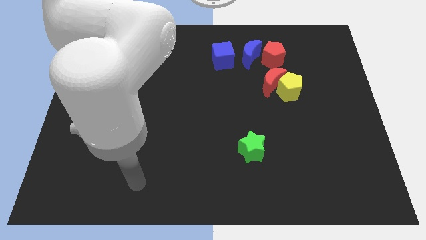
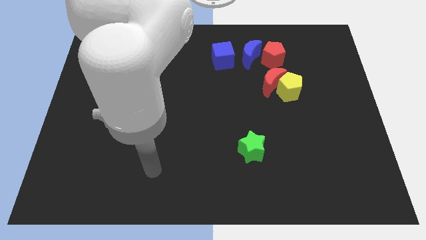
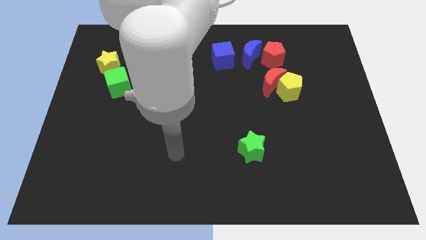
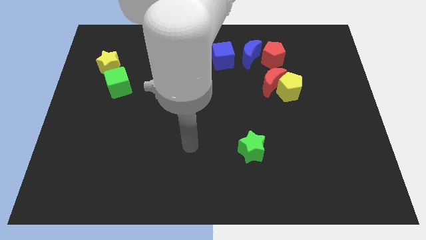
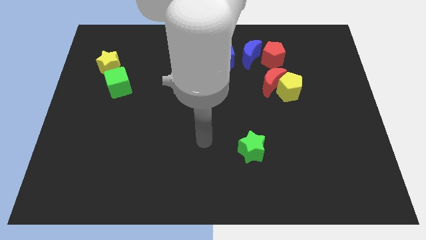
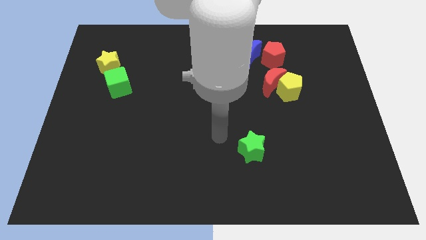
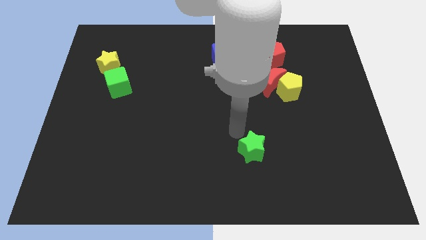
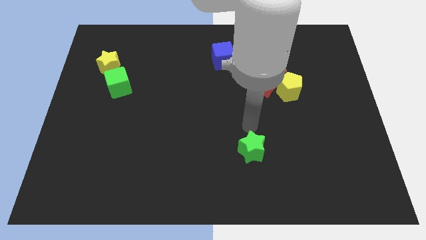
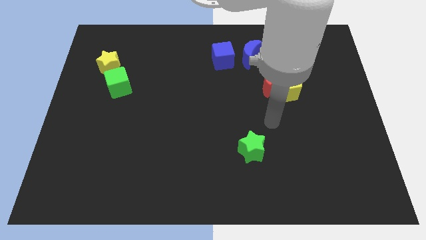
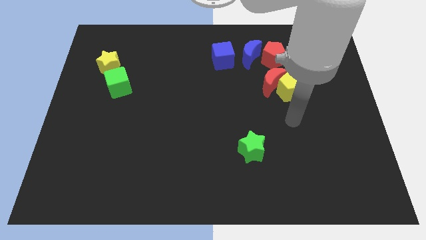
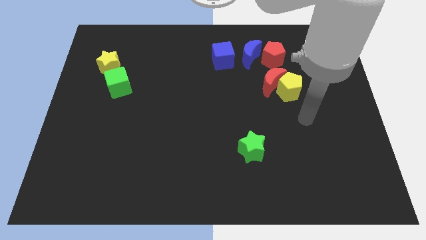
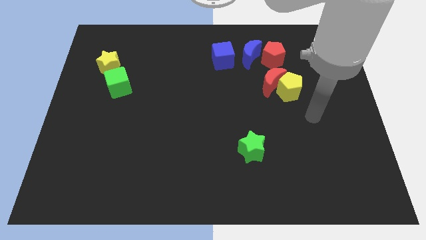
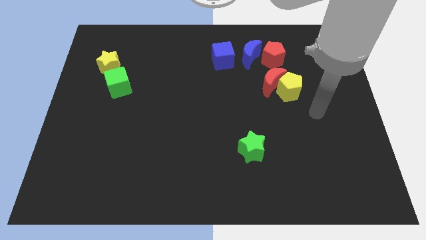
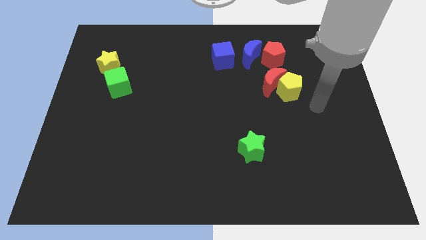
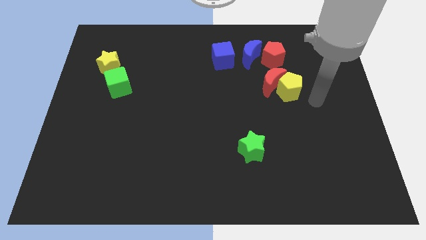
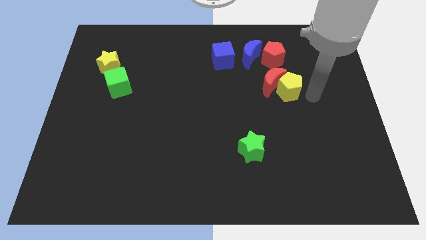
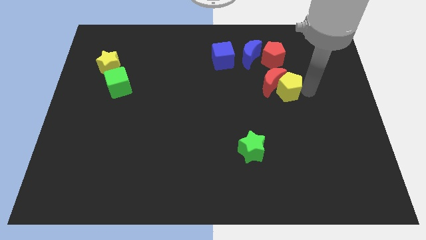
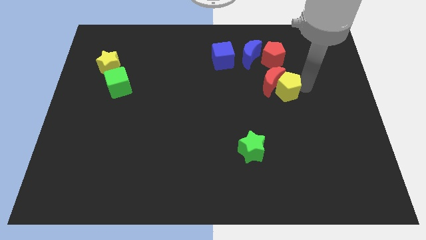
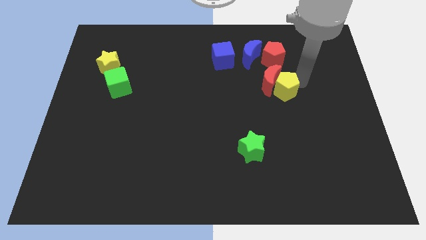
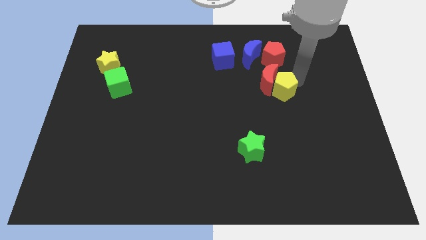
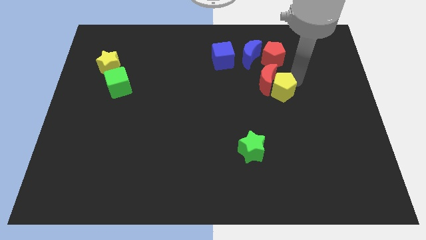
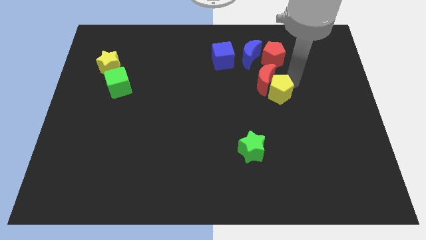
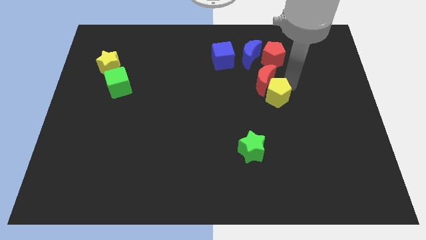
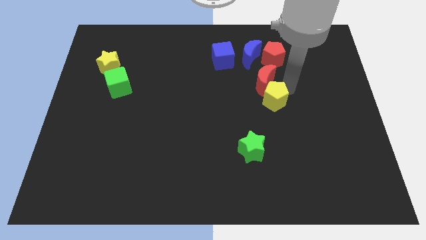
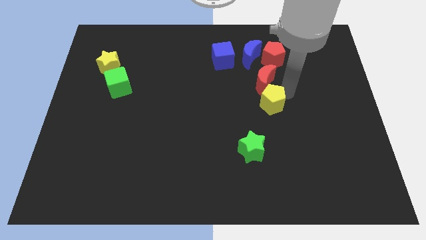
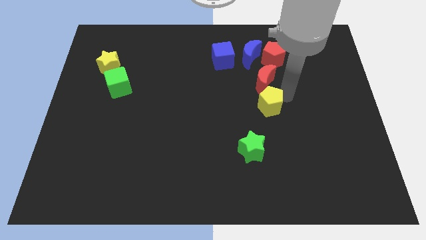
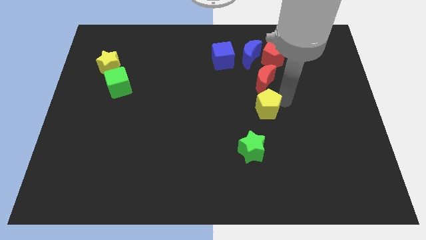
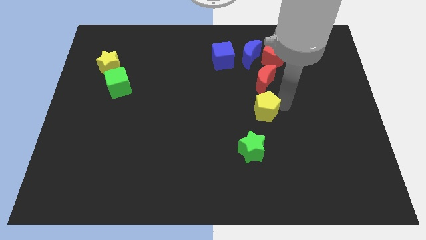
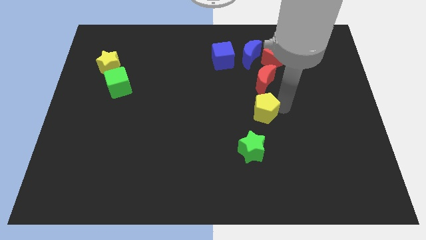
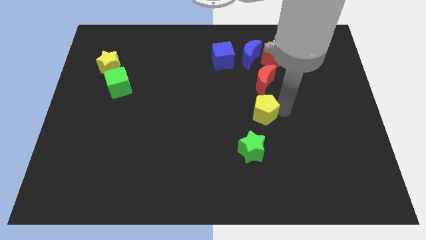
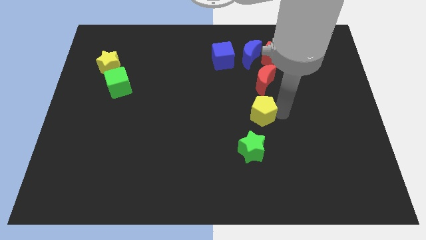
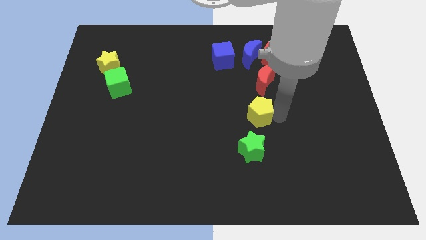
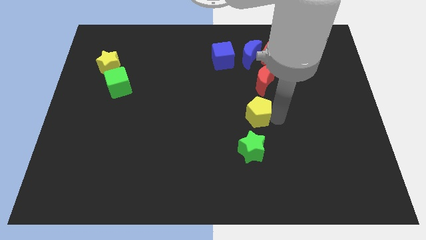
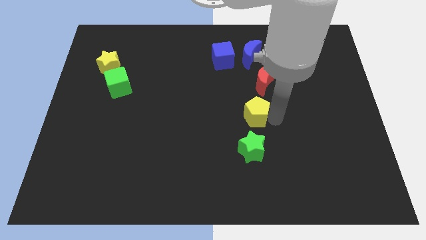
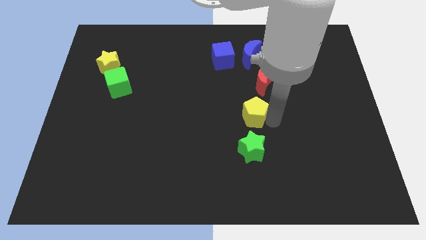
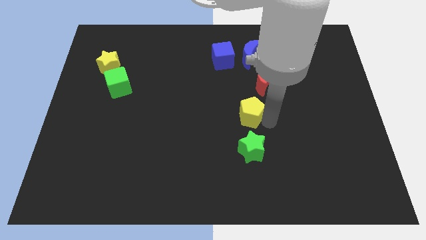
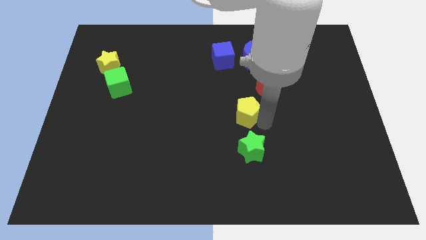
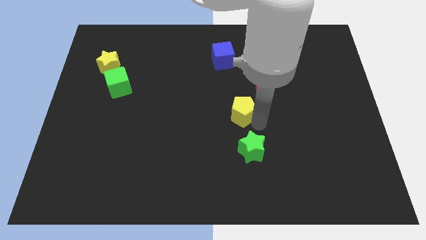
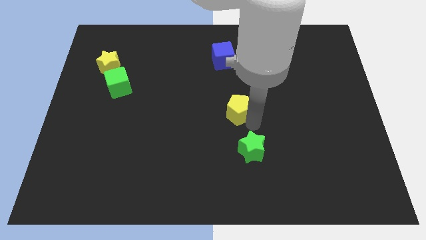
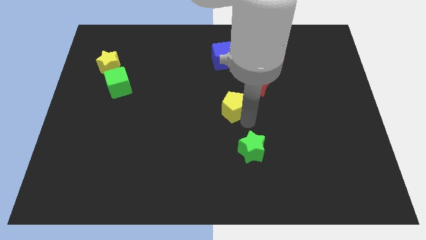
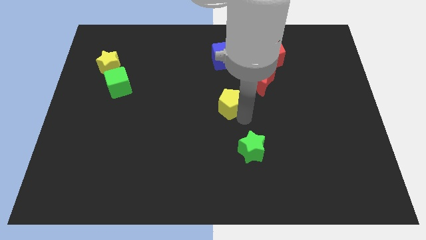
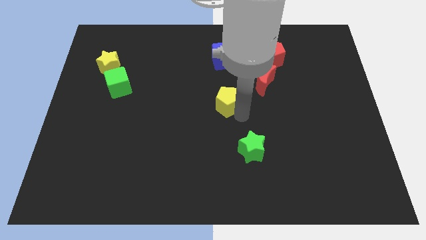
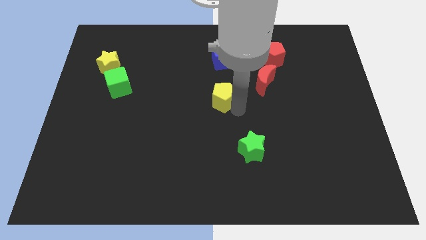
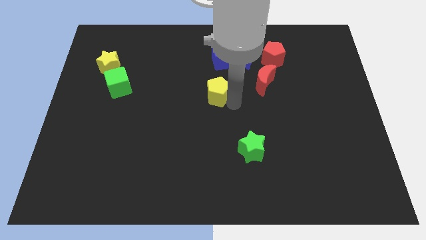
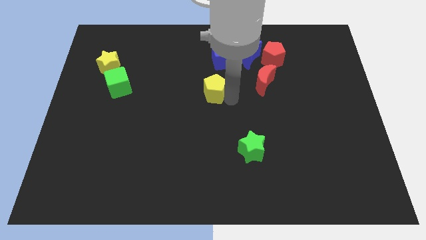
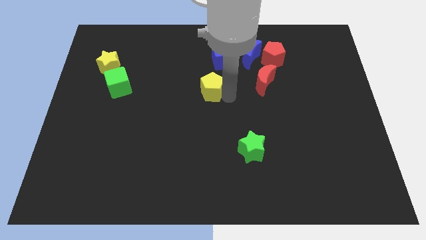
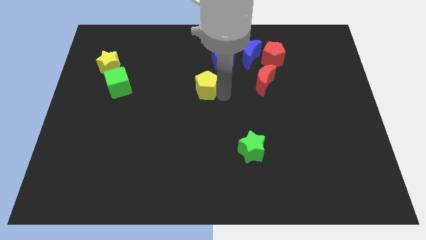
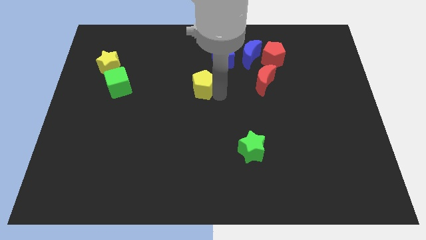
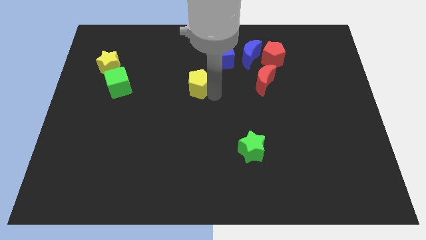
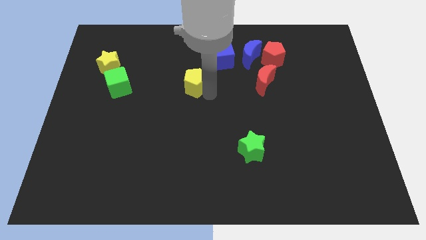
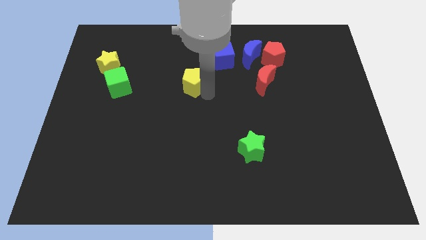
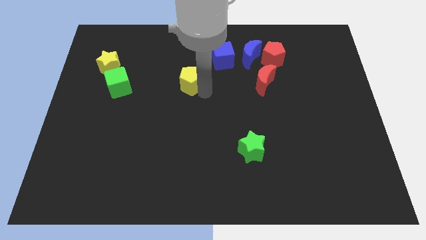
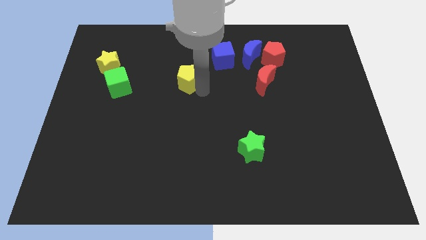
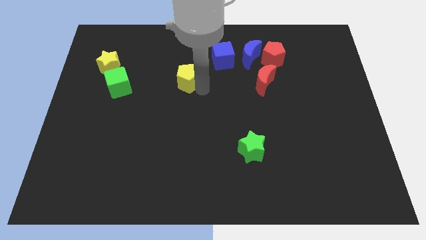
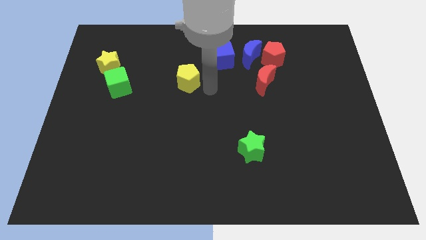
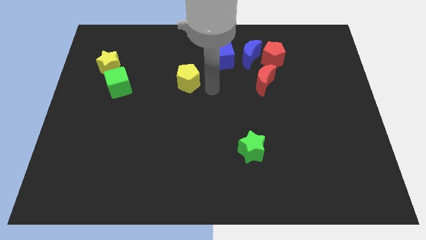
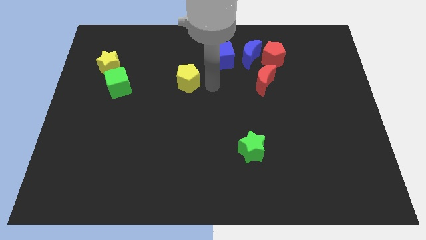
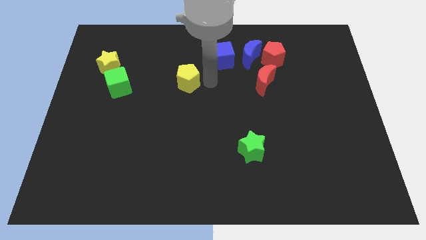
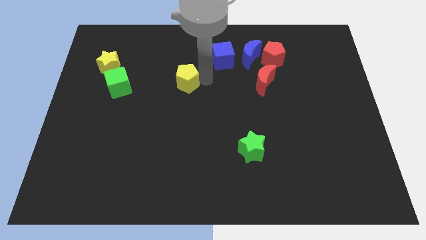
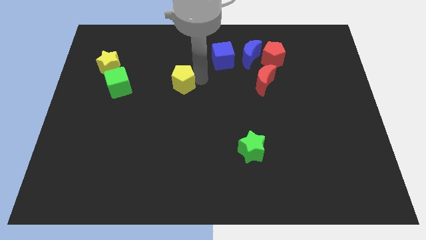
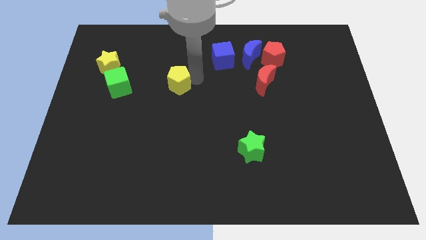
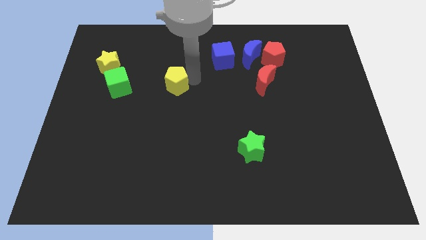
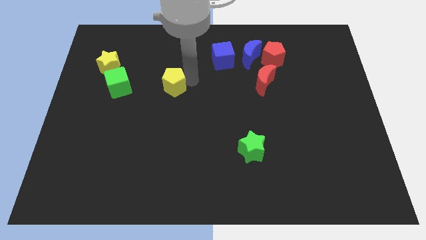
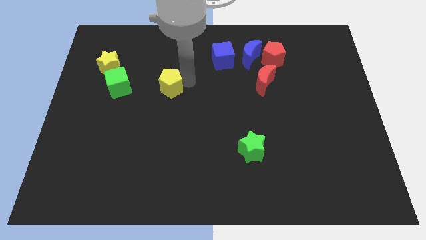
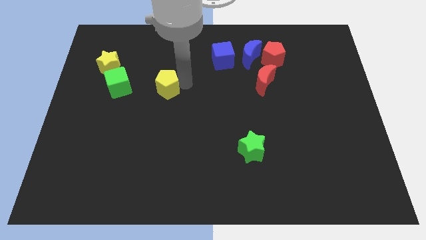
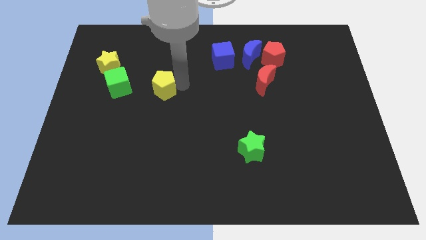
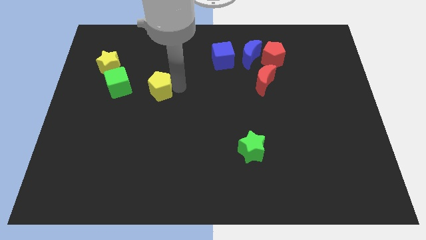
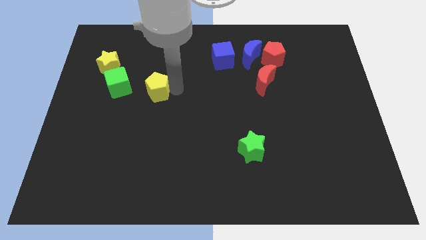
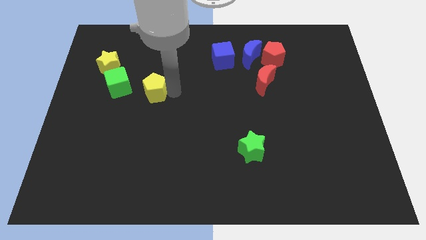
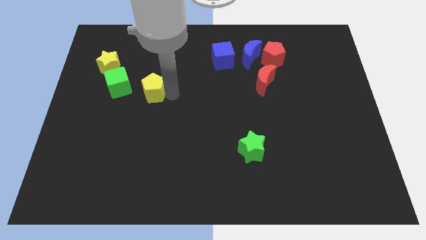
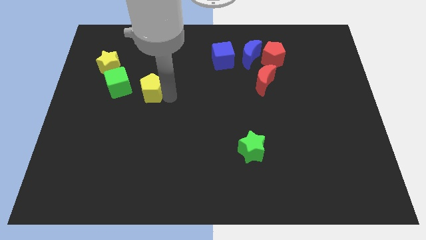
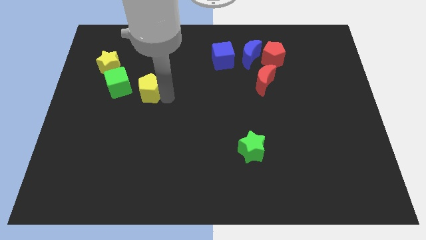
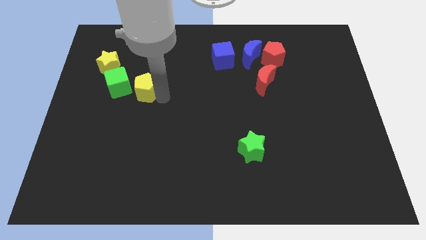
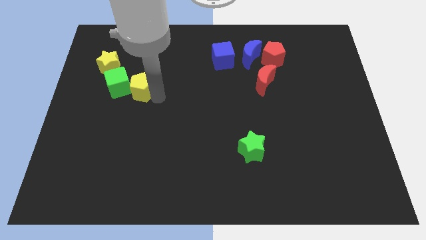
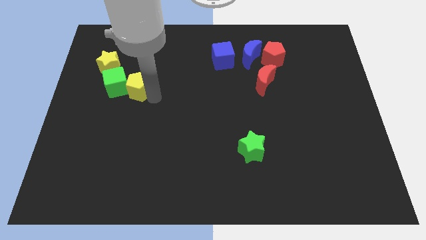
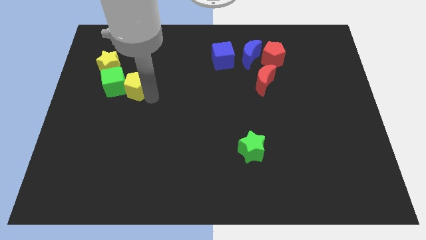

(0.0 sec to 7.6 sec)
put the yellow pentagon next to the green cube

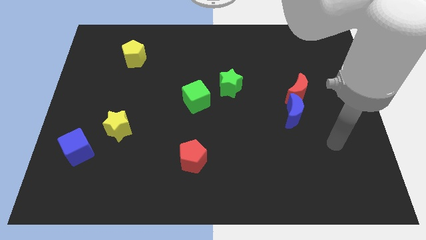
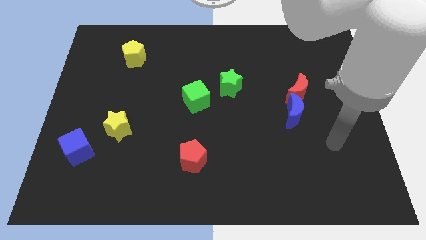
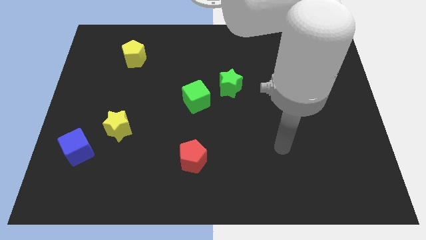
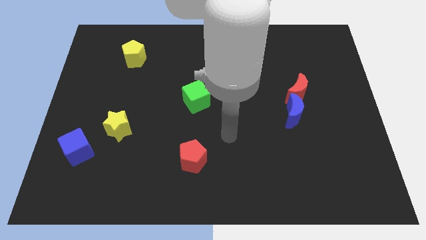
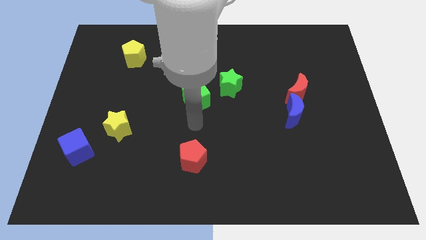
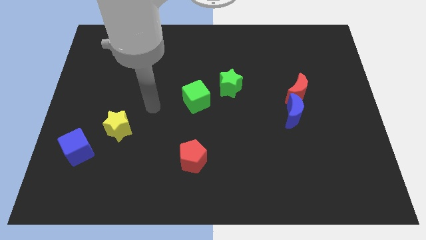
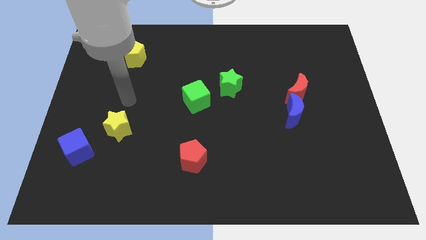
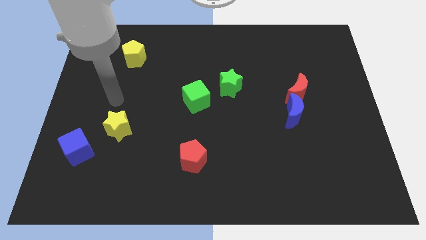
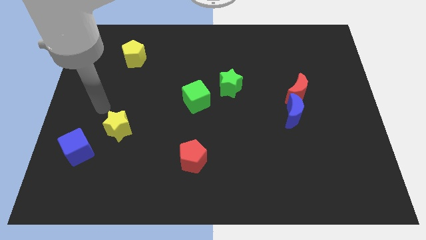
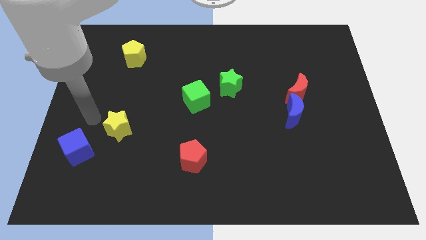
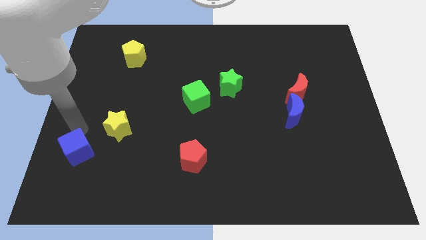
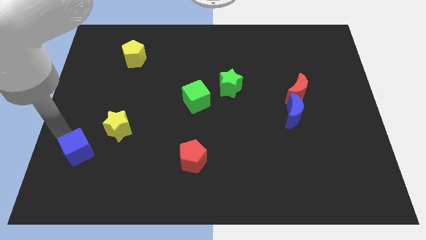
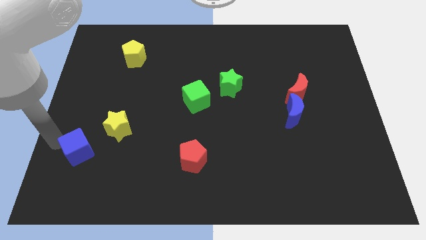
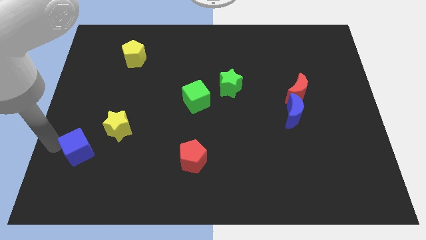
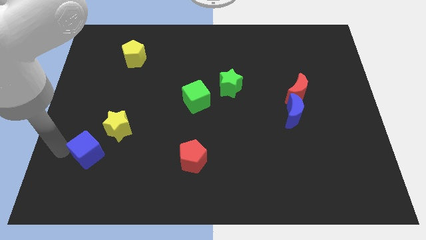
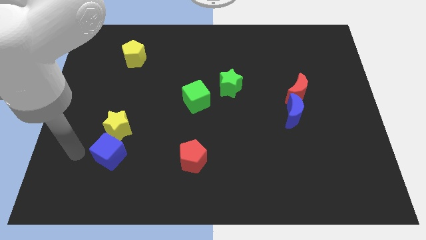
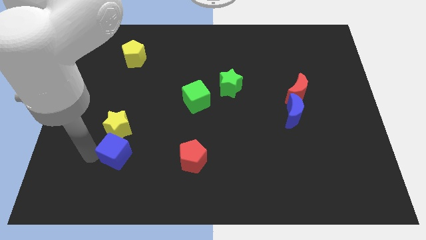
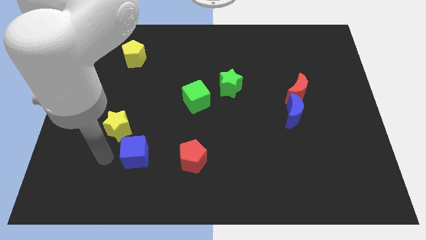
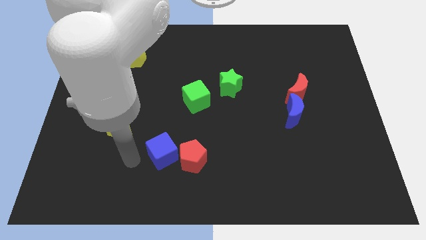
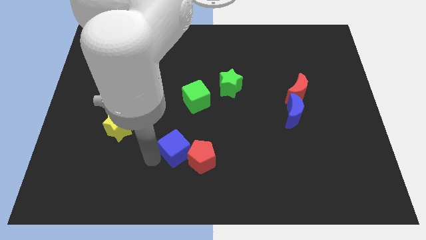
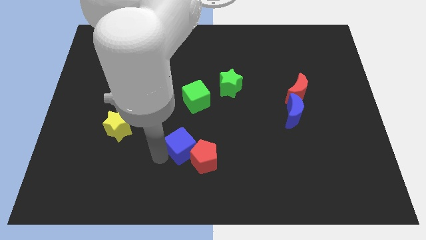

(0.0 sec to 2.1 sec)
put the blue cube close to the red pentagon
